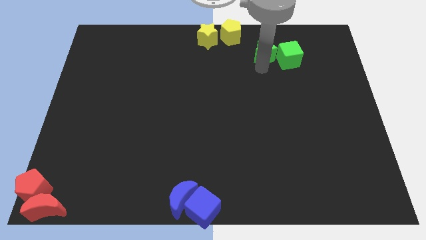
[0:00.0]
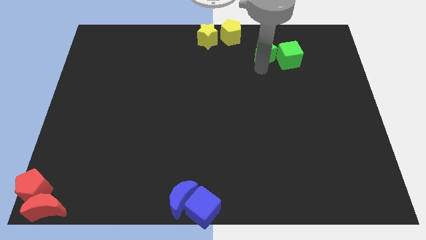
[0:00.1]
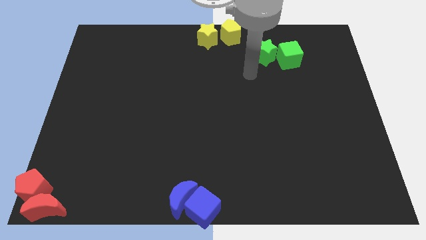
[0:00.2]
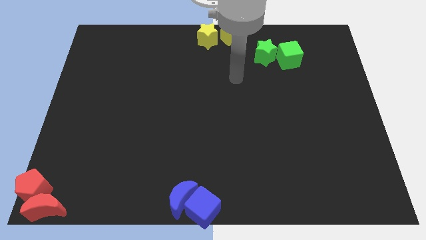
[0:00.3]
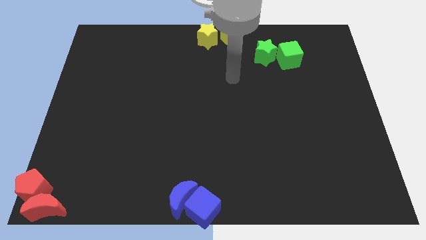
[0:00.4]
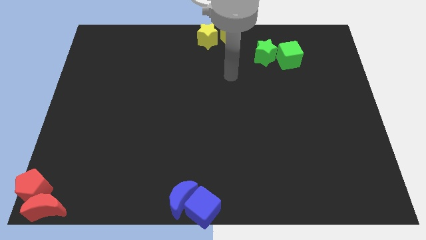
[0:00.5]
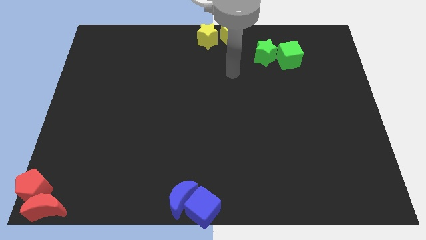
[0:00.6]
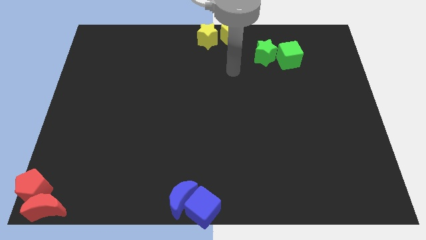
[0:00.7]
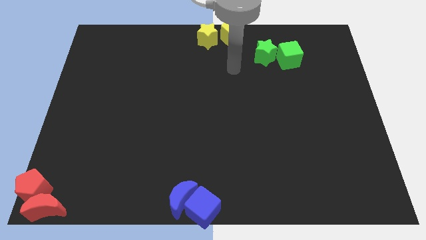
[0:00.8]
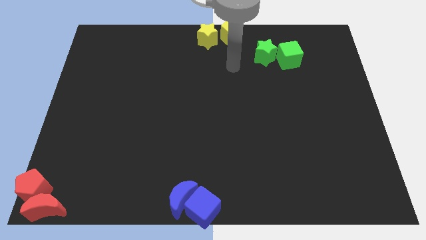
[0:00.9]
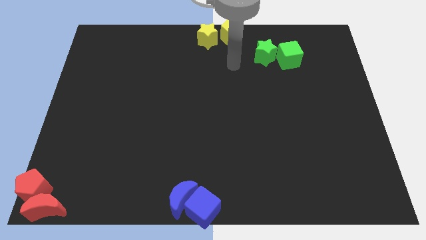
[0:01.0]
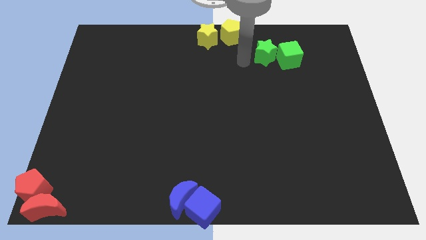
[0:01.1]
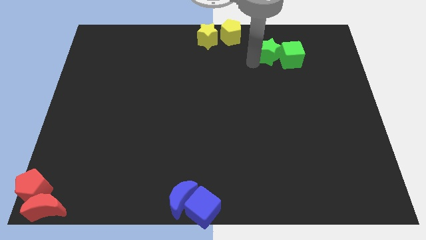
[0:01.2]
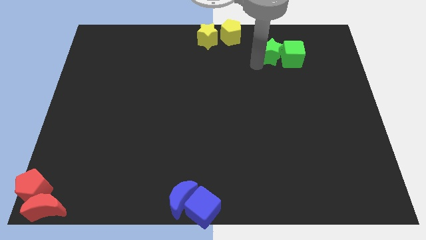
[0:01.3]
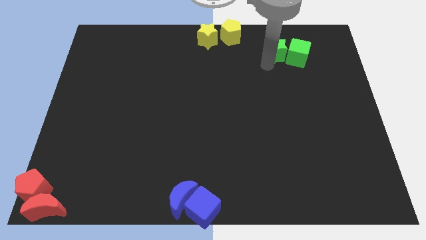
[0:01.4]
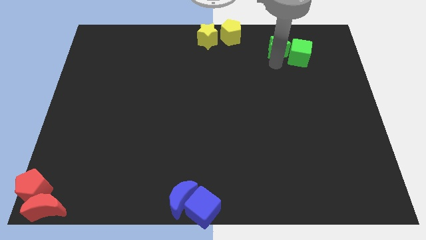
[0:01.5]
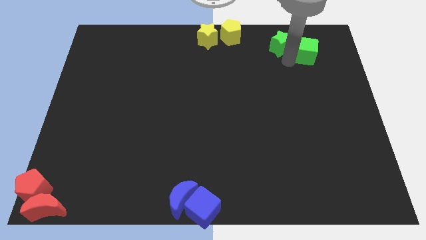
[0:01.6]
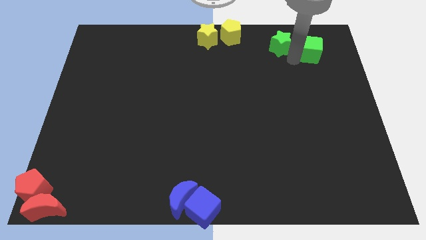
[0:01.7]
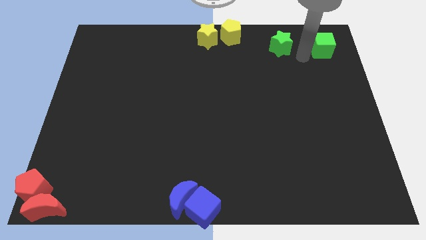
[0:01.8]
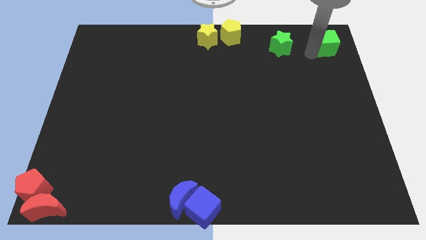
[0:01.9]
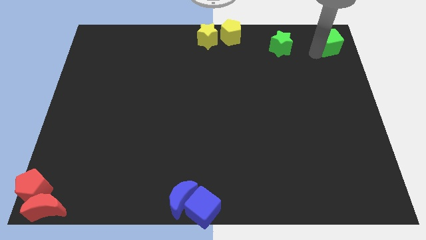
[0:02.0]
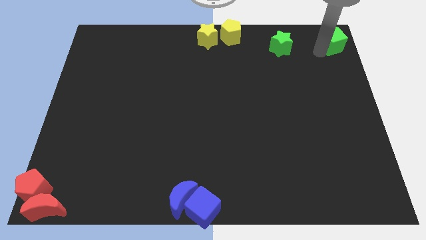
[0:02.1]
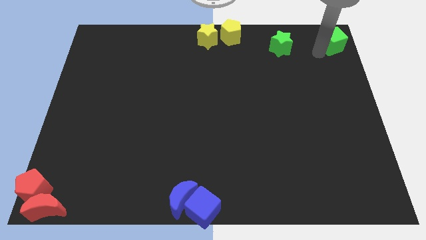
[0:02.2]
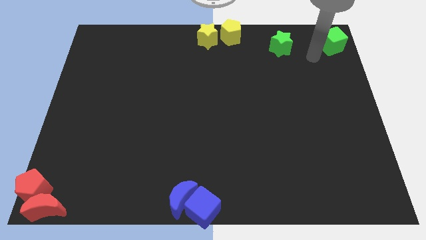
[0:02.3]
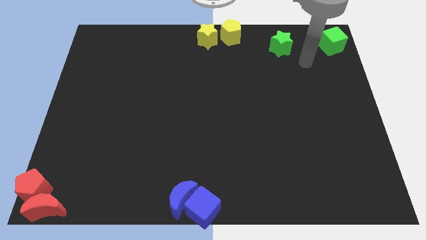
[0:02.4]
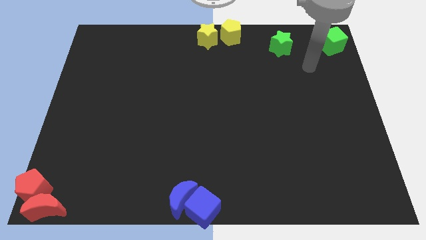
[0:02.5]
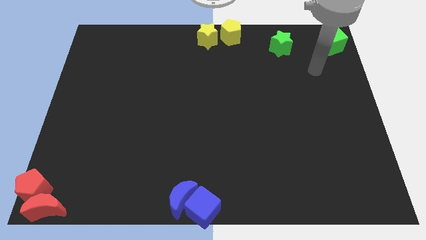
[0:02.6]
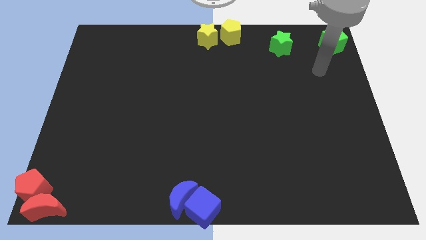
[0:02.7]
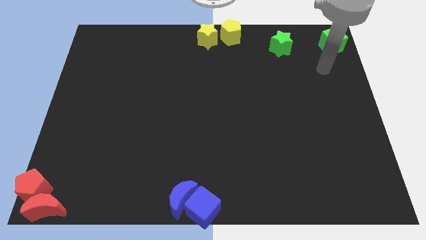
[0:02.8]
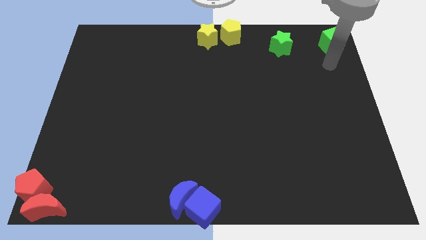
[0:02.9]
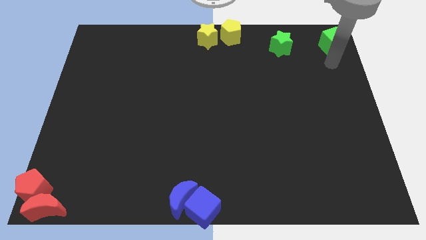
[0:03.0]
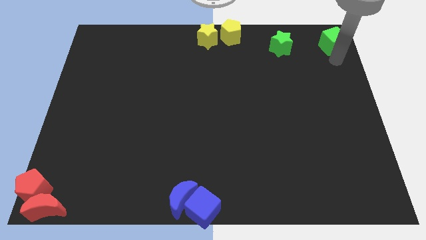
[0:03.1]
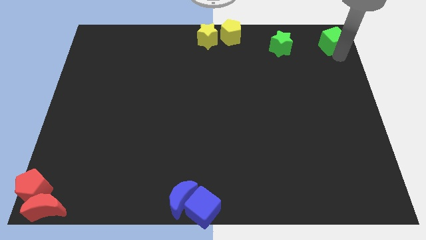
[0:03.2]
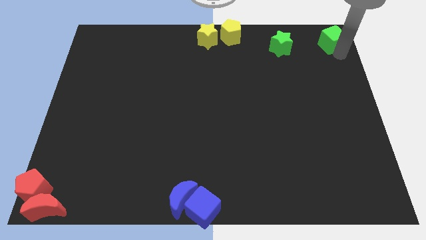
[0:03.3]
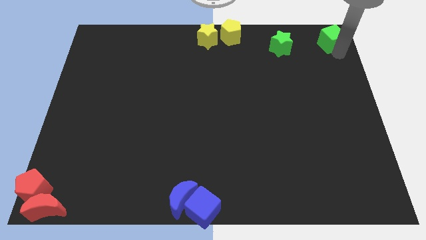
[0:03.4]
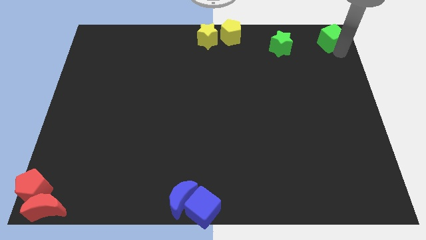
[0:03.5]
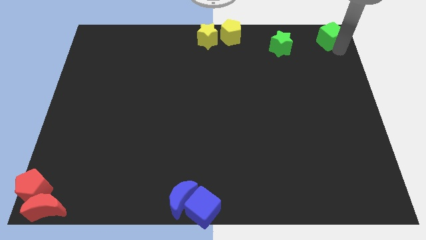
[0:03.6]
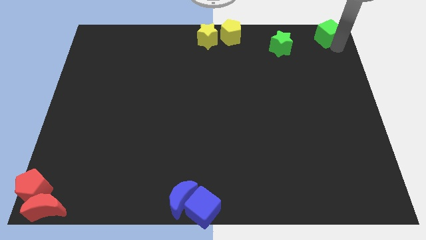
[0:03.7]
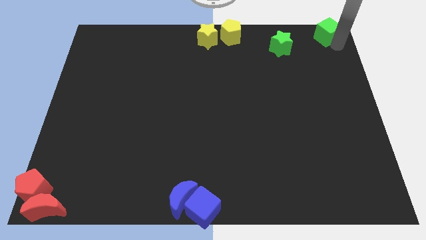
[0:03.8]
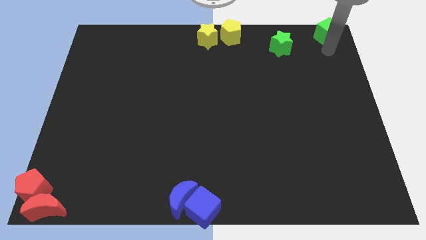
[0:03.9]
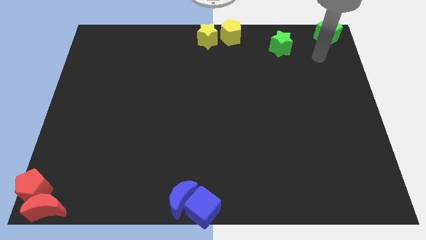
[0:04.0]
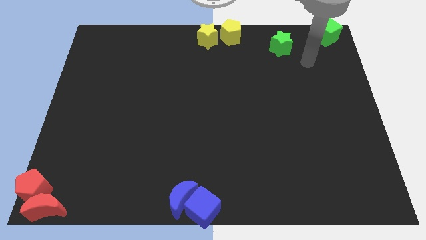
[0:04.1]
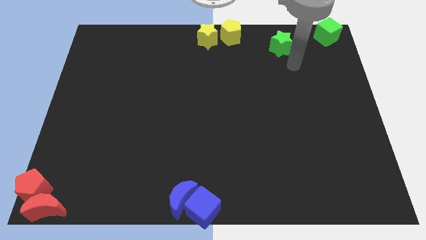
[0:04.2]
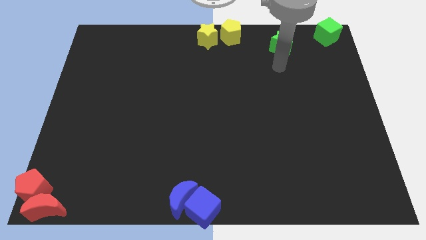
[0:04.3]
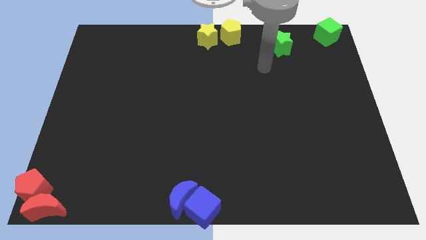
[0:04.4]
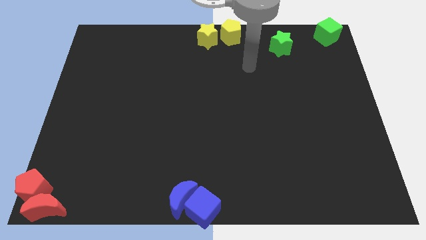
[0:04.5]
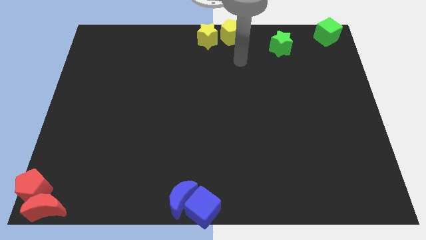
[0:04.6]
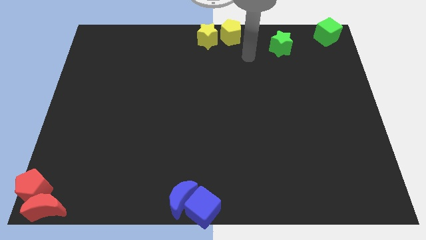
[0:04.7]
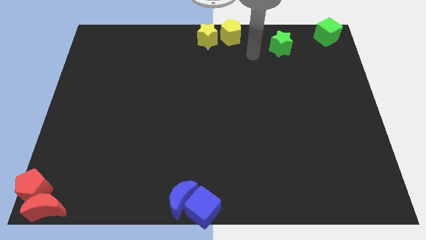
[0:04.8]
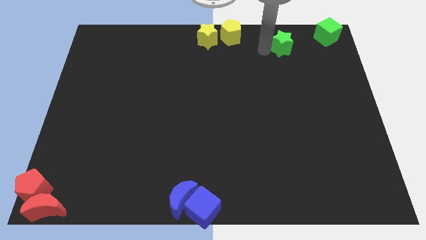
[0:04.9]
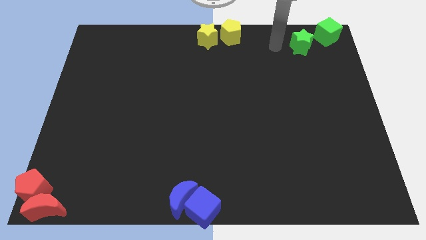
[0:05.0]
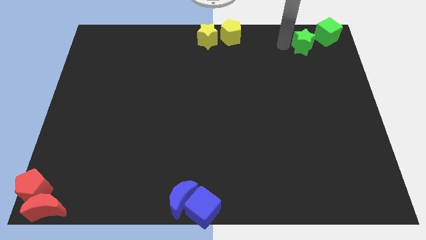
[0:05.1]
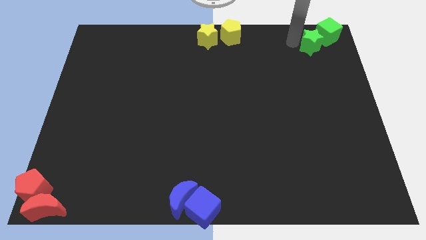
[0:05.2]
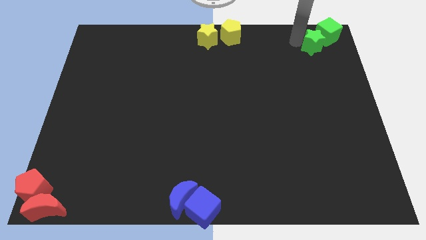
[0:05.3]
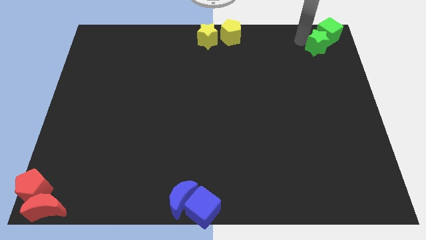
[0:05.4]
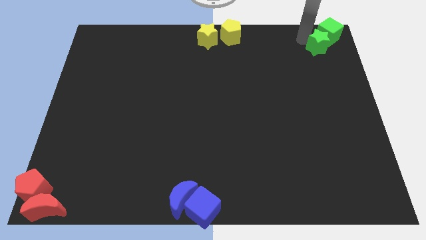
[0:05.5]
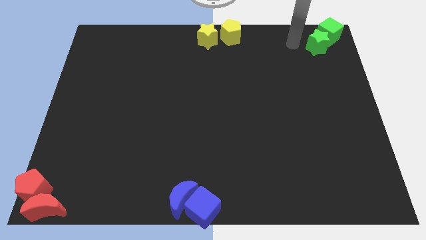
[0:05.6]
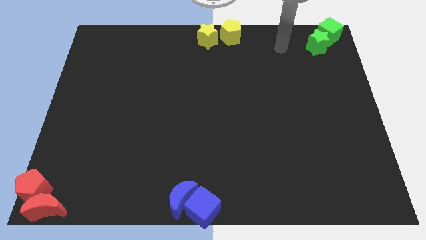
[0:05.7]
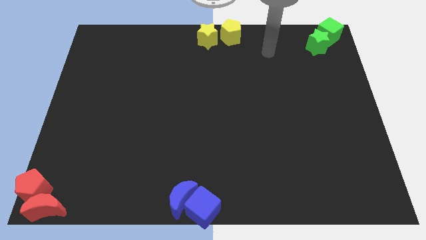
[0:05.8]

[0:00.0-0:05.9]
push the green cube and green star towards the top right corner of the board

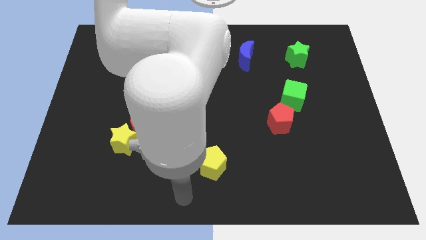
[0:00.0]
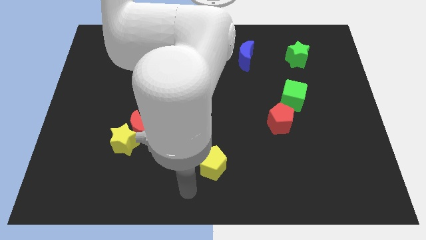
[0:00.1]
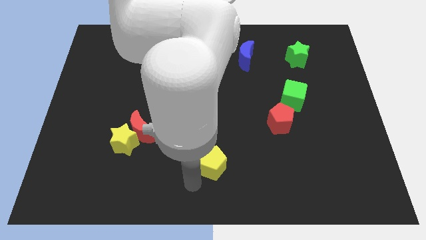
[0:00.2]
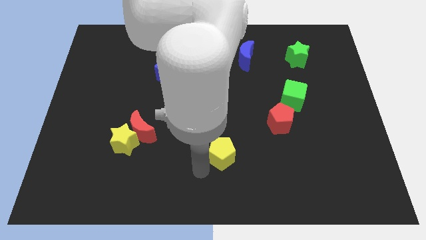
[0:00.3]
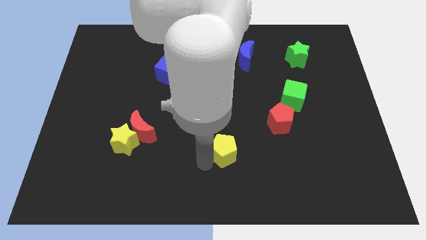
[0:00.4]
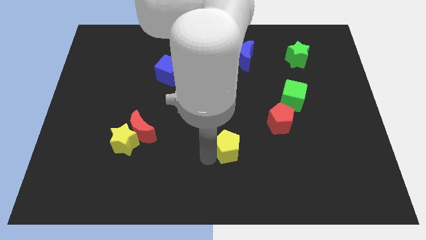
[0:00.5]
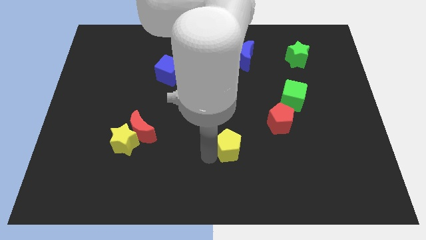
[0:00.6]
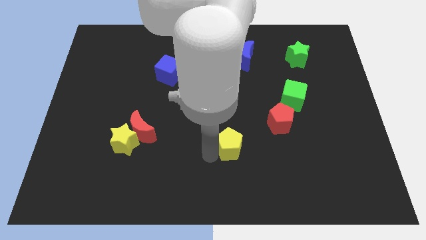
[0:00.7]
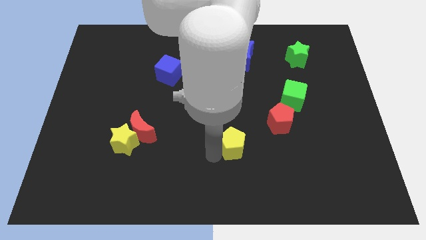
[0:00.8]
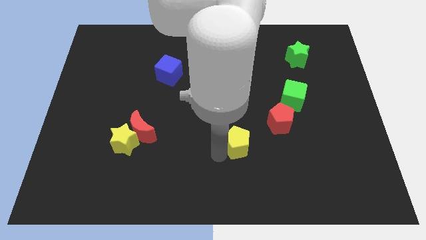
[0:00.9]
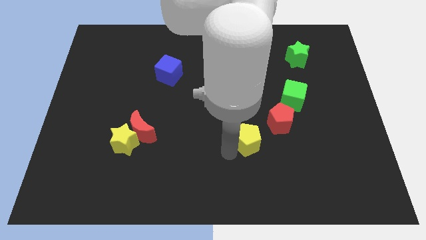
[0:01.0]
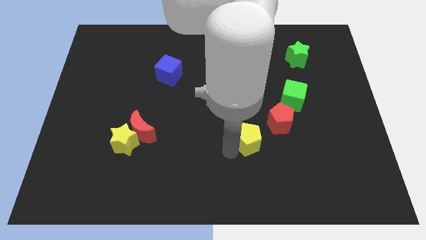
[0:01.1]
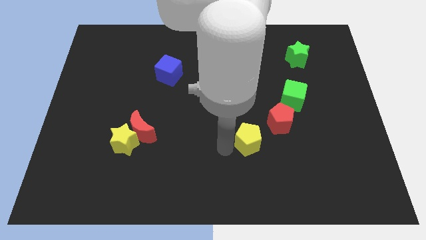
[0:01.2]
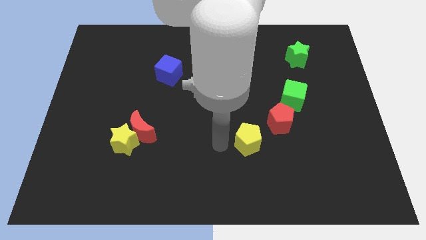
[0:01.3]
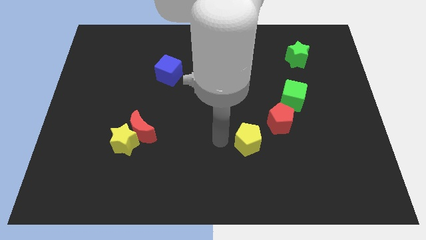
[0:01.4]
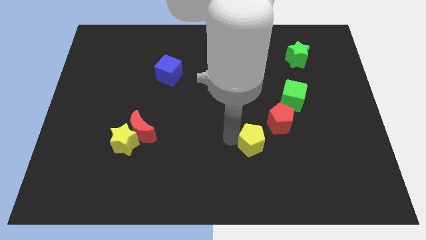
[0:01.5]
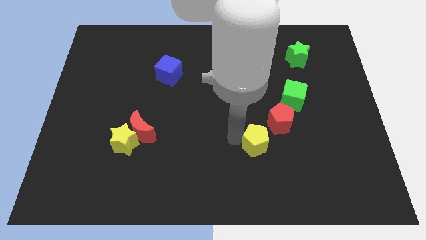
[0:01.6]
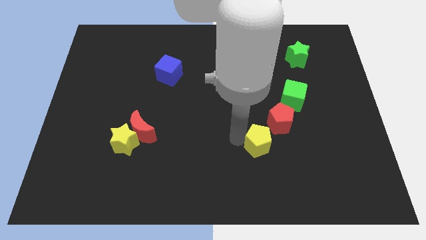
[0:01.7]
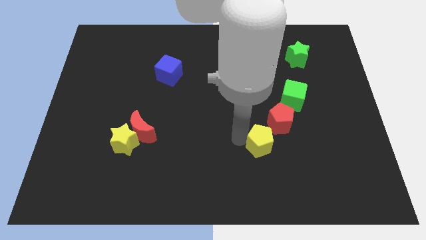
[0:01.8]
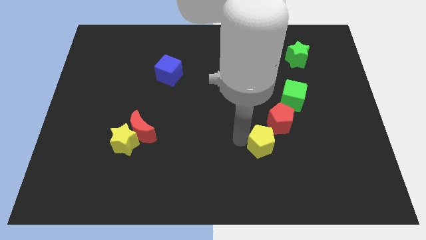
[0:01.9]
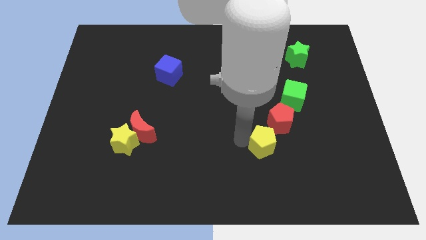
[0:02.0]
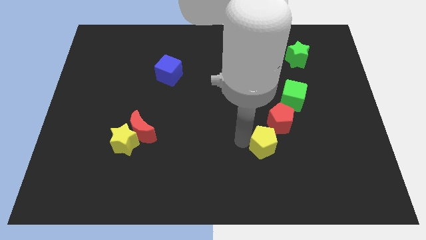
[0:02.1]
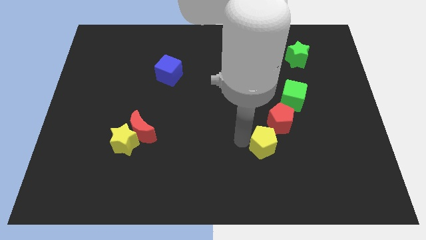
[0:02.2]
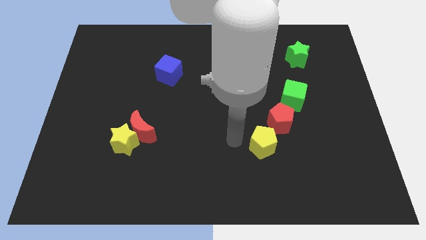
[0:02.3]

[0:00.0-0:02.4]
place the yellow pentagon diagonally on the bottom left side of the red pentagon

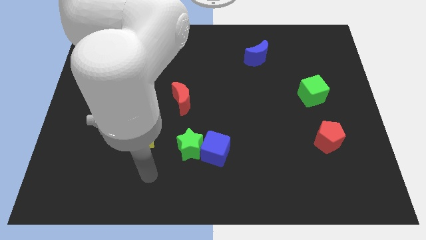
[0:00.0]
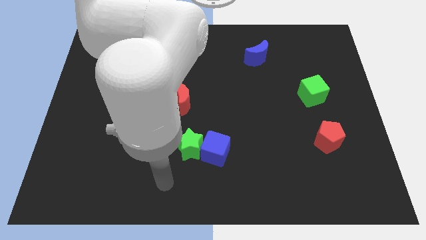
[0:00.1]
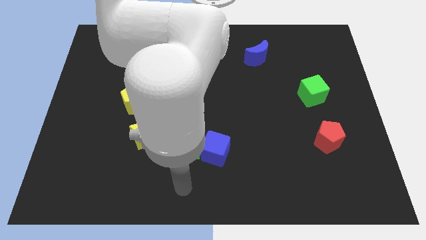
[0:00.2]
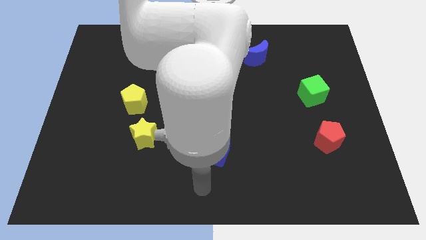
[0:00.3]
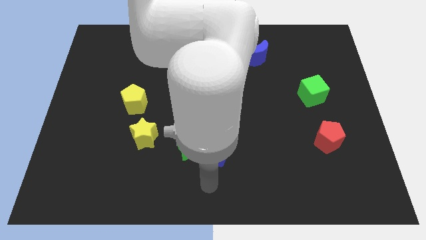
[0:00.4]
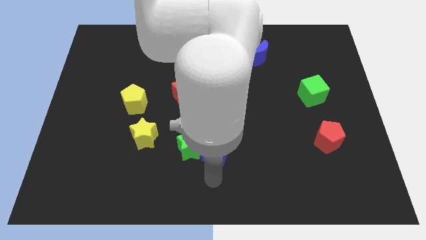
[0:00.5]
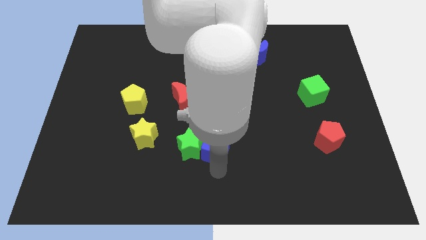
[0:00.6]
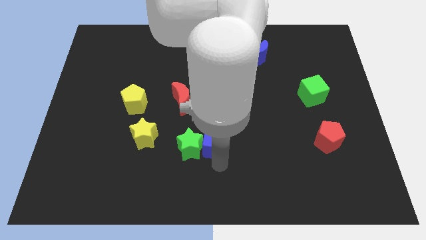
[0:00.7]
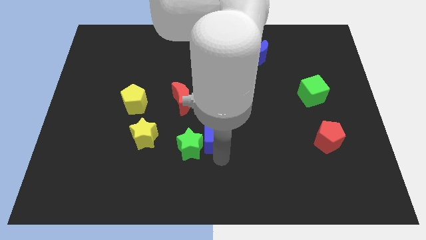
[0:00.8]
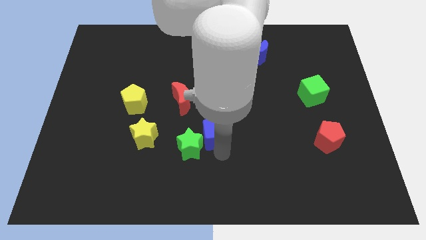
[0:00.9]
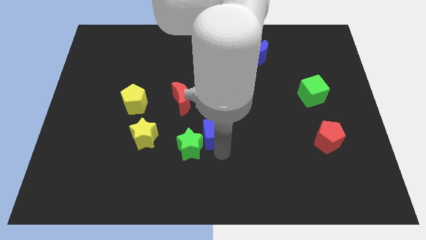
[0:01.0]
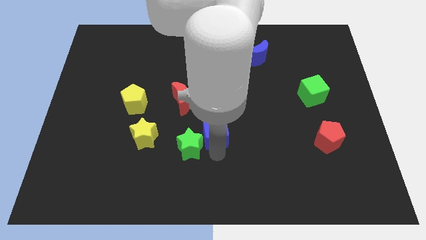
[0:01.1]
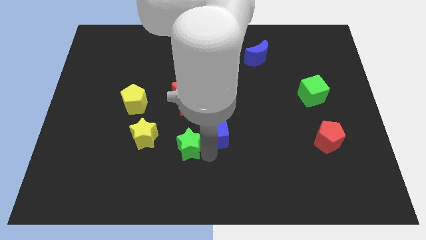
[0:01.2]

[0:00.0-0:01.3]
slightly move the blue cube up
